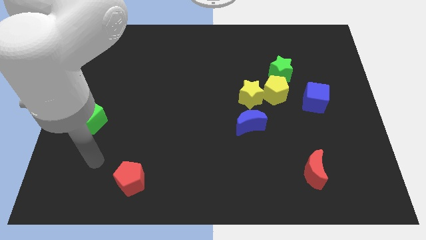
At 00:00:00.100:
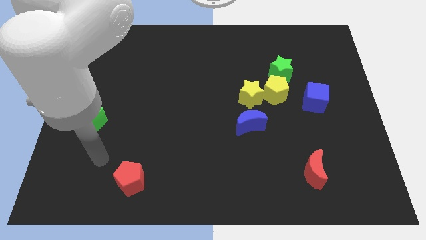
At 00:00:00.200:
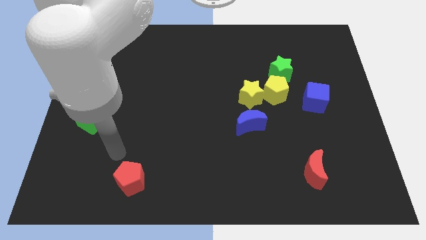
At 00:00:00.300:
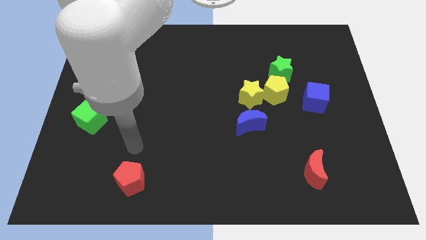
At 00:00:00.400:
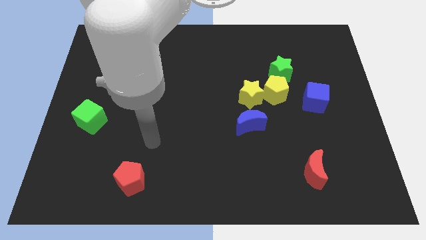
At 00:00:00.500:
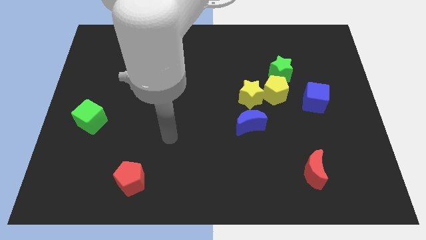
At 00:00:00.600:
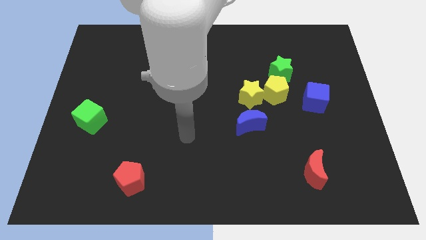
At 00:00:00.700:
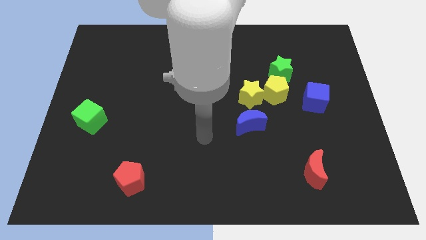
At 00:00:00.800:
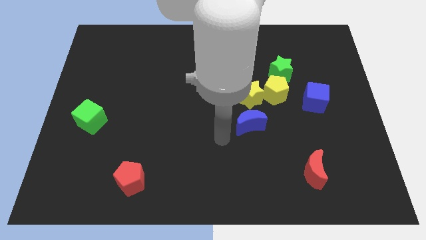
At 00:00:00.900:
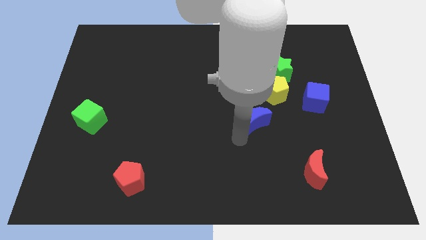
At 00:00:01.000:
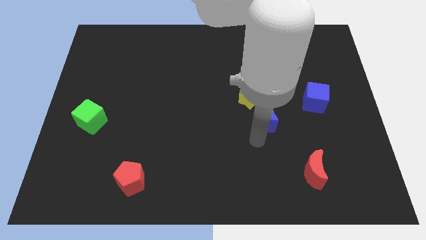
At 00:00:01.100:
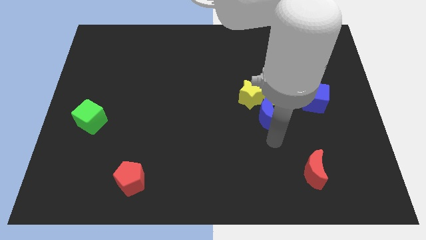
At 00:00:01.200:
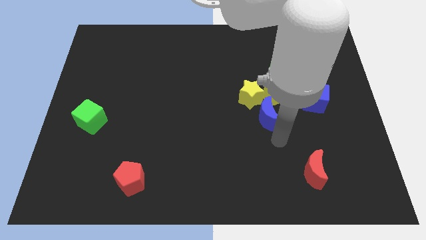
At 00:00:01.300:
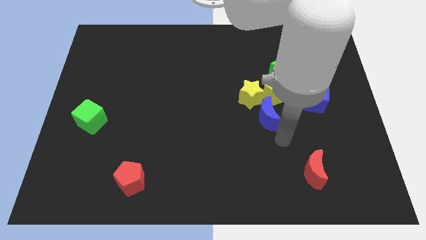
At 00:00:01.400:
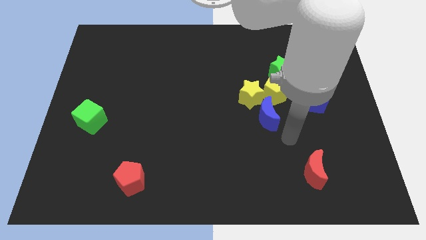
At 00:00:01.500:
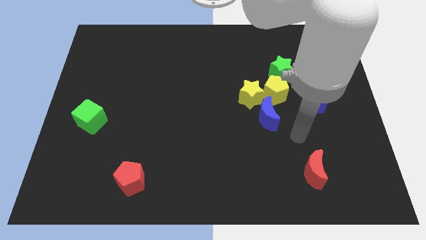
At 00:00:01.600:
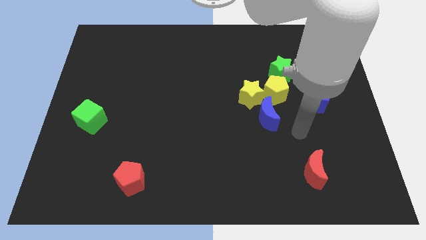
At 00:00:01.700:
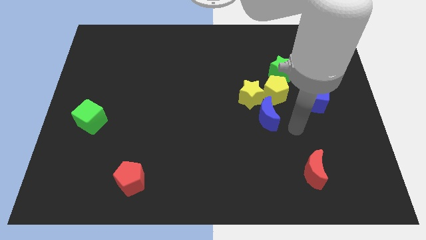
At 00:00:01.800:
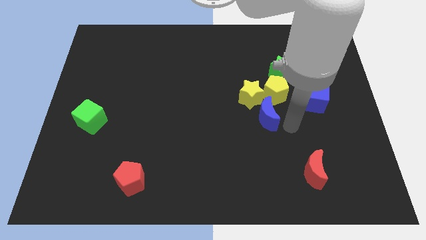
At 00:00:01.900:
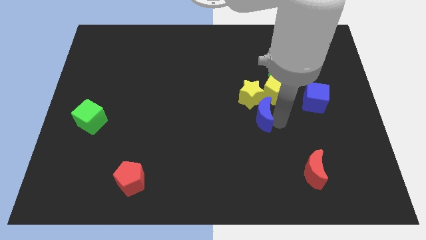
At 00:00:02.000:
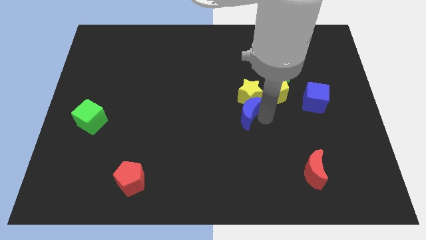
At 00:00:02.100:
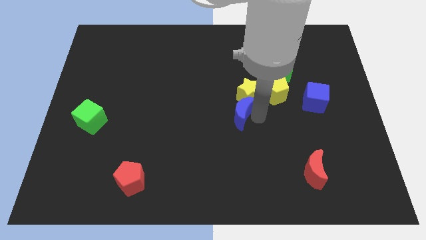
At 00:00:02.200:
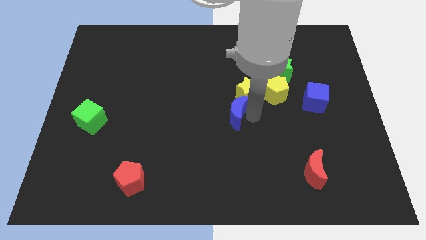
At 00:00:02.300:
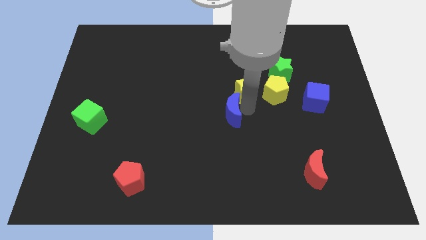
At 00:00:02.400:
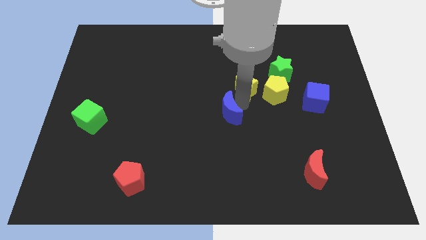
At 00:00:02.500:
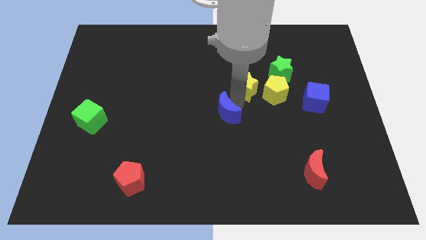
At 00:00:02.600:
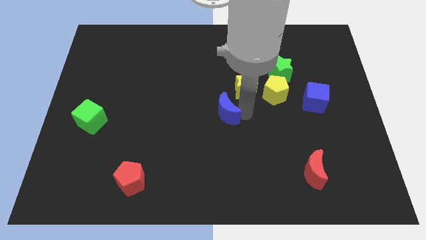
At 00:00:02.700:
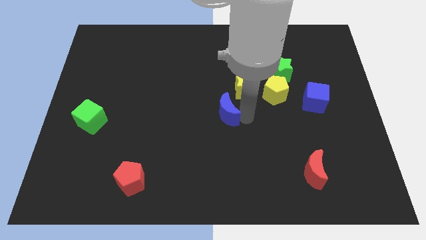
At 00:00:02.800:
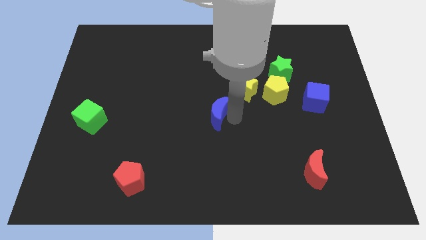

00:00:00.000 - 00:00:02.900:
move the blue moon to the middle of the board

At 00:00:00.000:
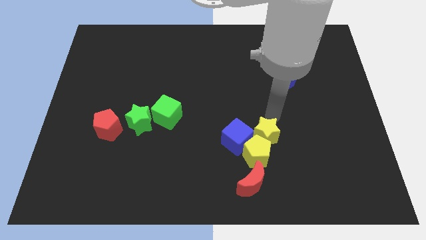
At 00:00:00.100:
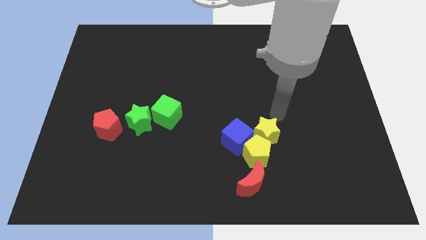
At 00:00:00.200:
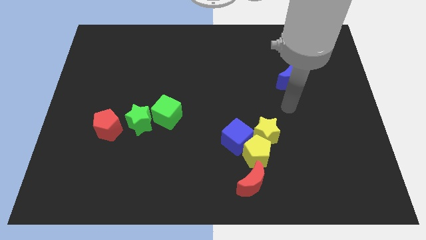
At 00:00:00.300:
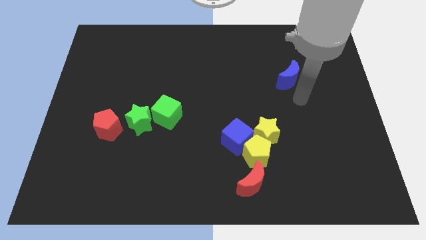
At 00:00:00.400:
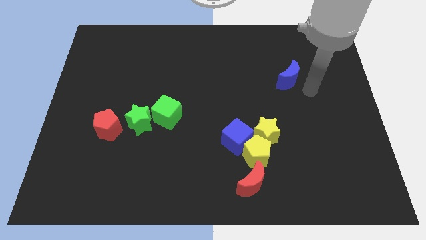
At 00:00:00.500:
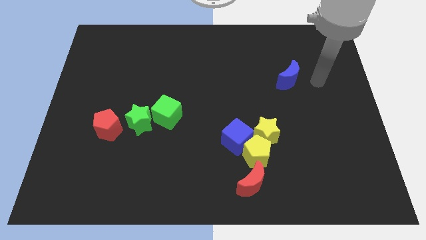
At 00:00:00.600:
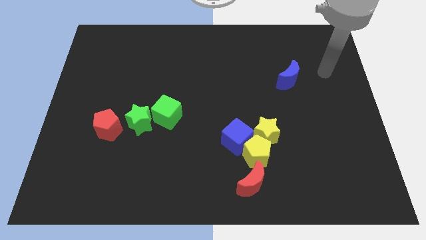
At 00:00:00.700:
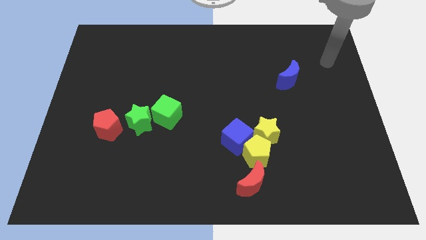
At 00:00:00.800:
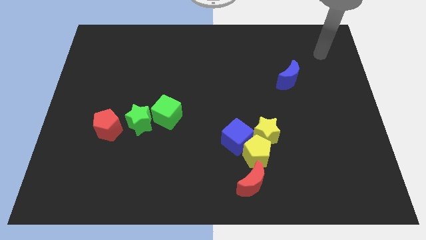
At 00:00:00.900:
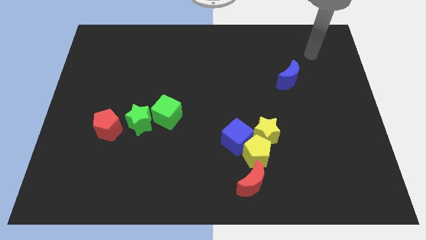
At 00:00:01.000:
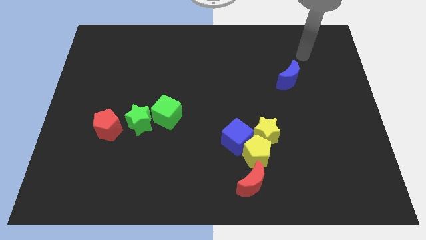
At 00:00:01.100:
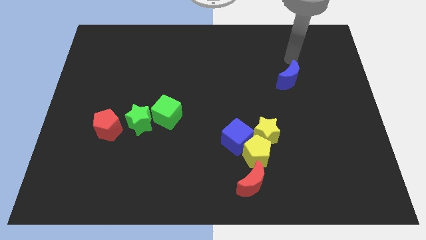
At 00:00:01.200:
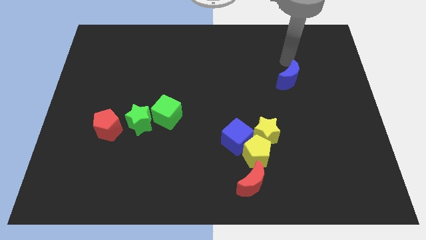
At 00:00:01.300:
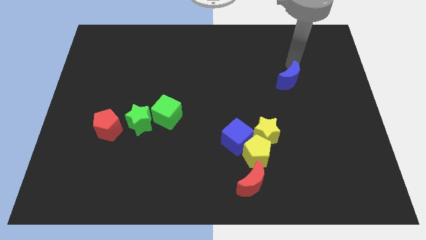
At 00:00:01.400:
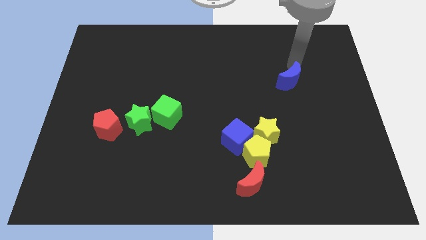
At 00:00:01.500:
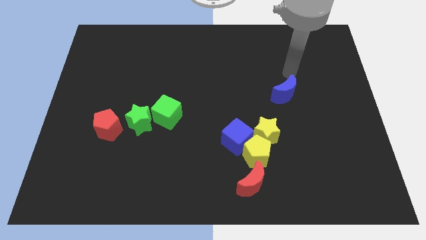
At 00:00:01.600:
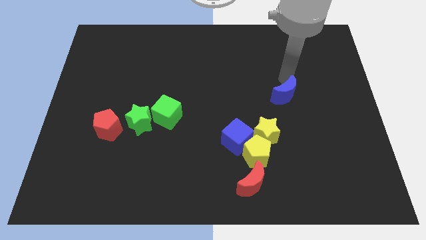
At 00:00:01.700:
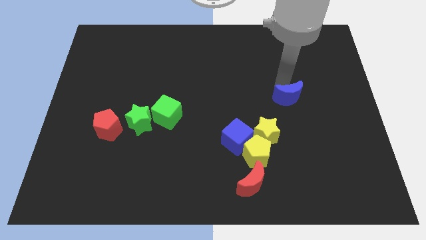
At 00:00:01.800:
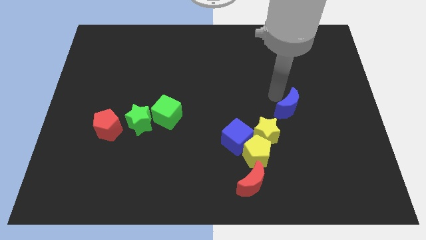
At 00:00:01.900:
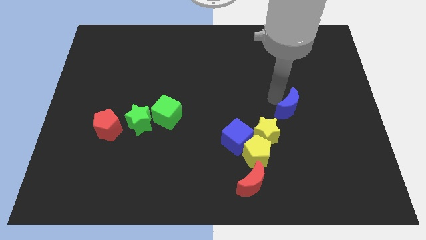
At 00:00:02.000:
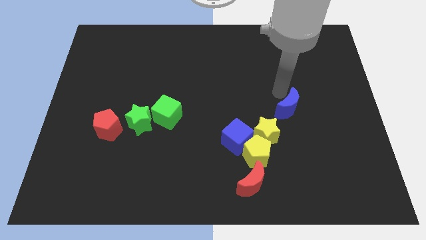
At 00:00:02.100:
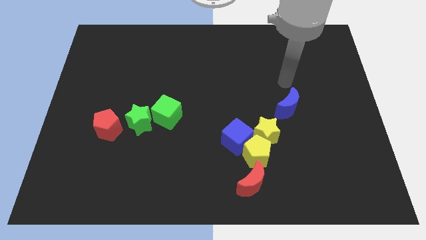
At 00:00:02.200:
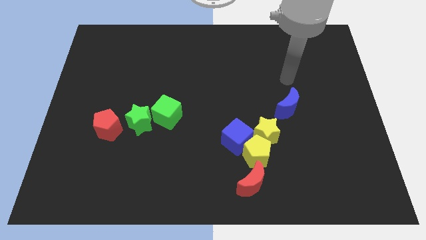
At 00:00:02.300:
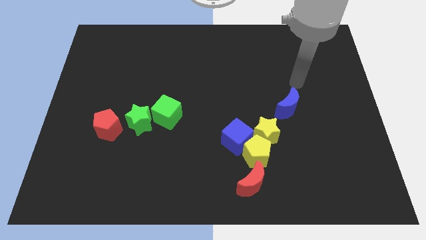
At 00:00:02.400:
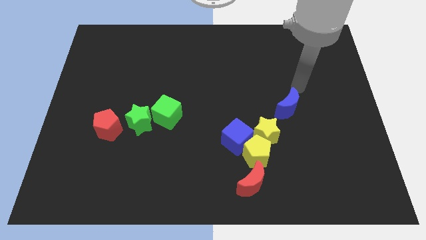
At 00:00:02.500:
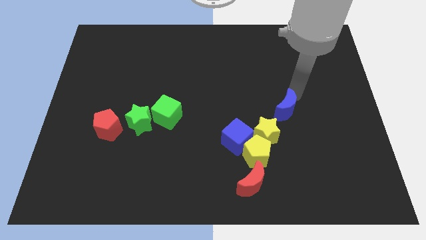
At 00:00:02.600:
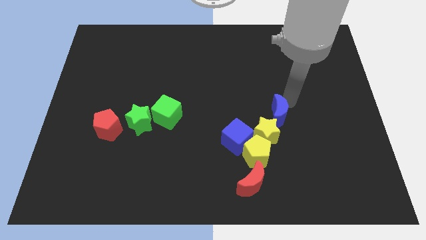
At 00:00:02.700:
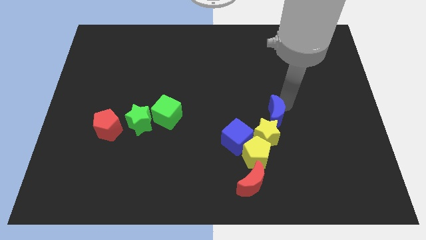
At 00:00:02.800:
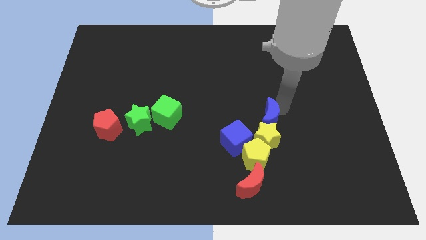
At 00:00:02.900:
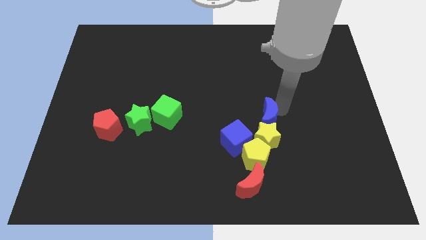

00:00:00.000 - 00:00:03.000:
move the blue crescent to the top of the yellow star

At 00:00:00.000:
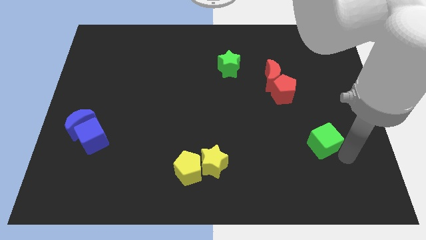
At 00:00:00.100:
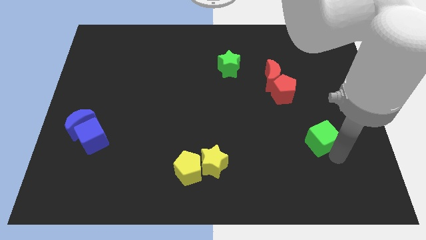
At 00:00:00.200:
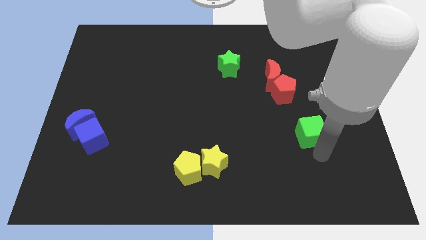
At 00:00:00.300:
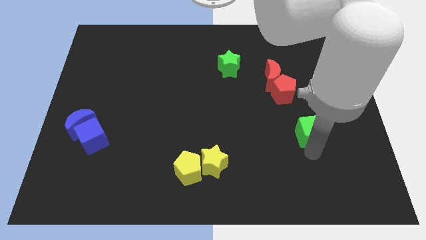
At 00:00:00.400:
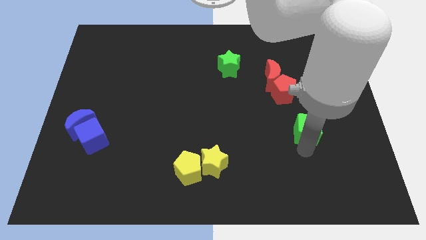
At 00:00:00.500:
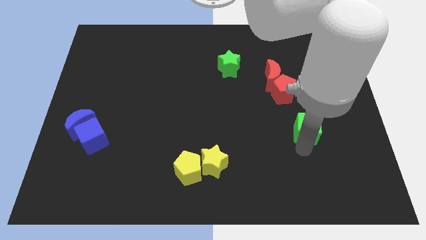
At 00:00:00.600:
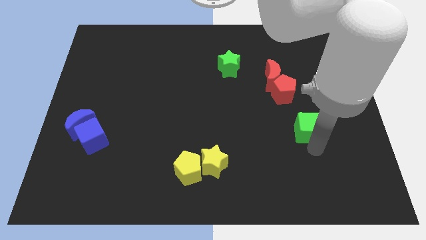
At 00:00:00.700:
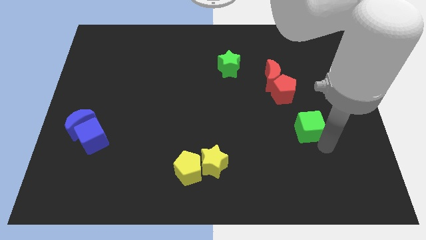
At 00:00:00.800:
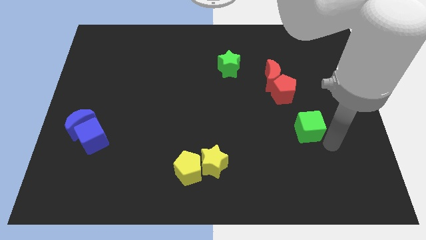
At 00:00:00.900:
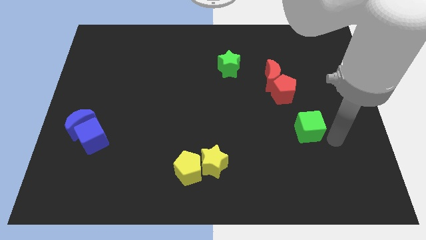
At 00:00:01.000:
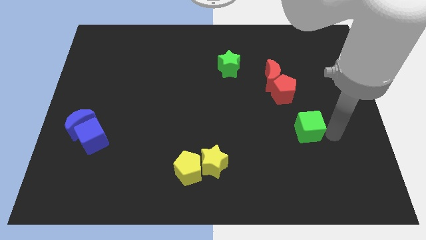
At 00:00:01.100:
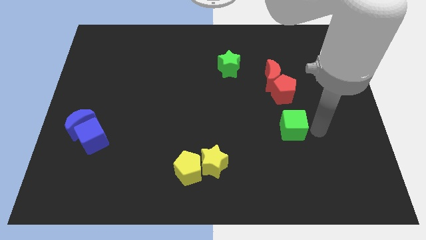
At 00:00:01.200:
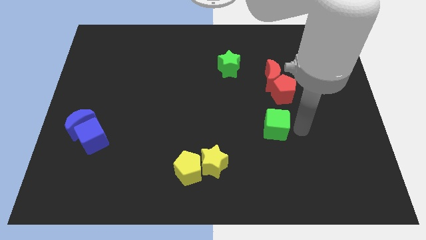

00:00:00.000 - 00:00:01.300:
move the green cube to the bottom of the red pentagon

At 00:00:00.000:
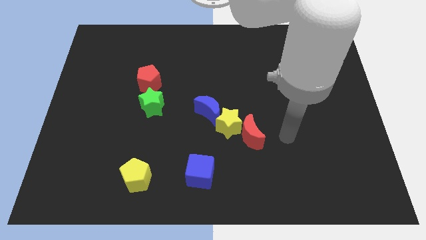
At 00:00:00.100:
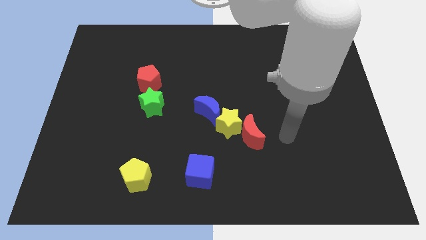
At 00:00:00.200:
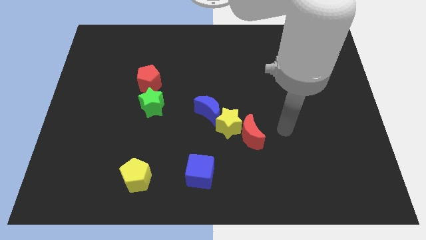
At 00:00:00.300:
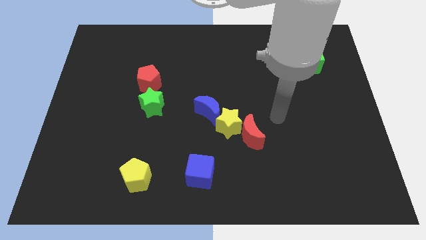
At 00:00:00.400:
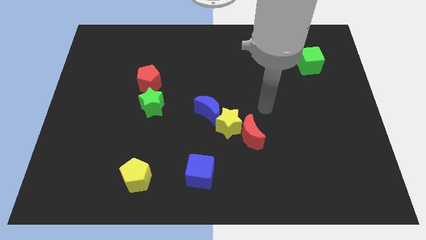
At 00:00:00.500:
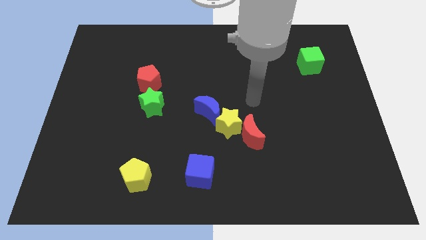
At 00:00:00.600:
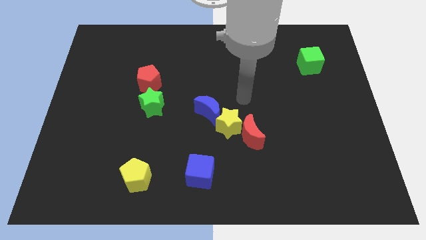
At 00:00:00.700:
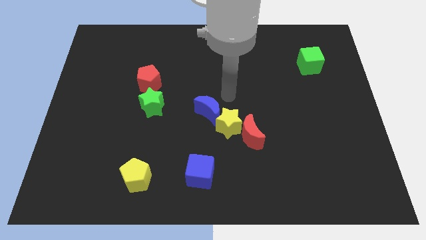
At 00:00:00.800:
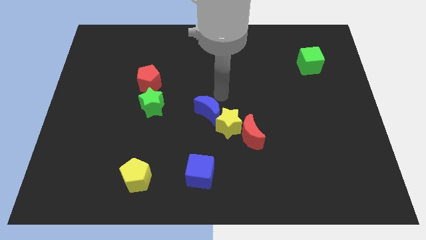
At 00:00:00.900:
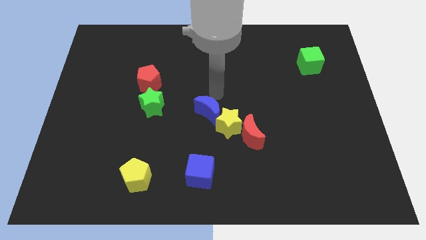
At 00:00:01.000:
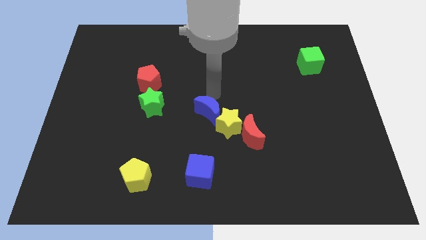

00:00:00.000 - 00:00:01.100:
slide your arm at the top of blue moon

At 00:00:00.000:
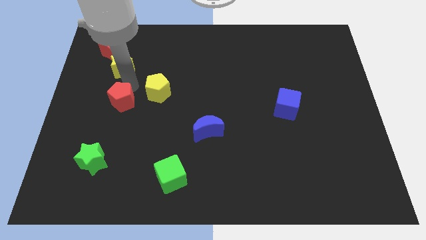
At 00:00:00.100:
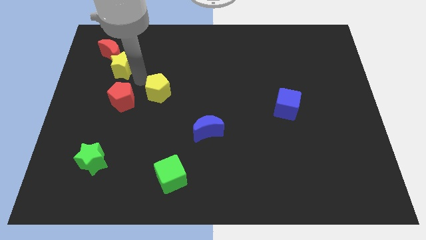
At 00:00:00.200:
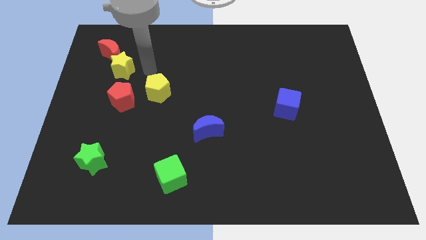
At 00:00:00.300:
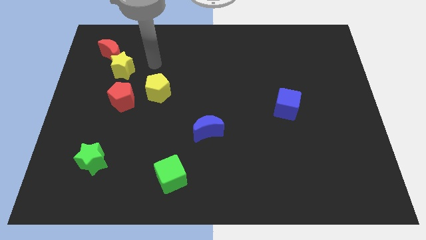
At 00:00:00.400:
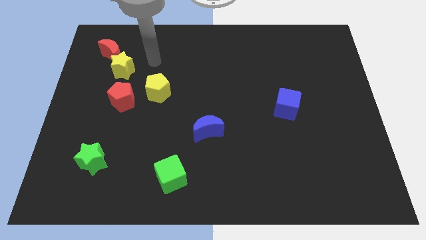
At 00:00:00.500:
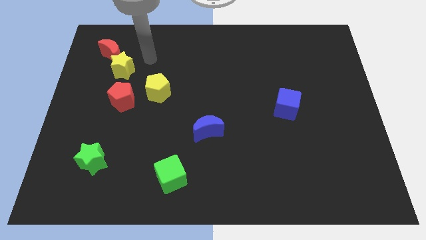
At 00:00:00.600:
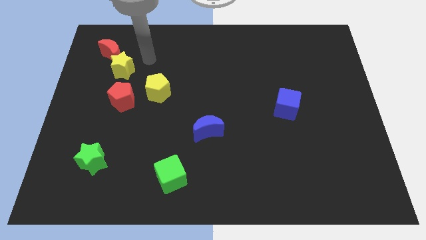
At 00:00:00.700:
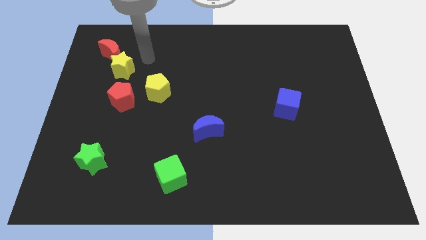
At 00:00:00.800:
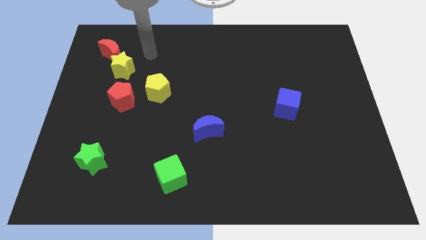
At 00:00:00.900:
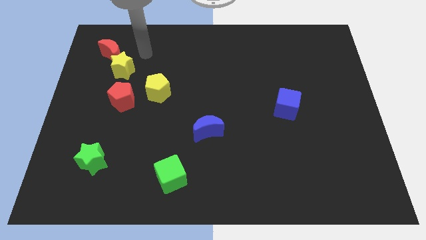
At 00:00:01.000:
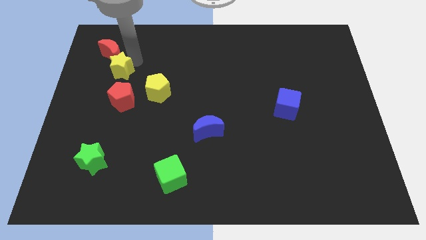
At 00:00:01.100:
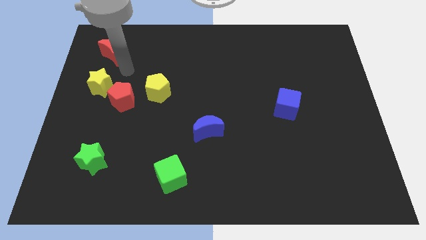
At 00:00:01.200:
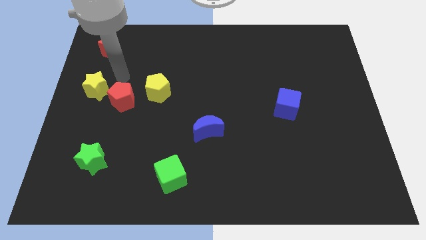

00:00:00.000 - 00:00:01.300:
place the yellow star towards the top left side of the red pentagon
